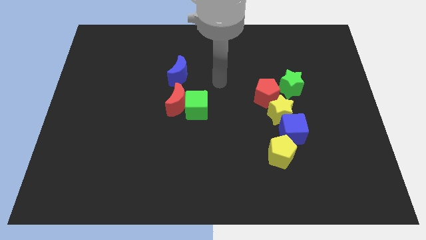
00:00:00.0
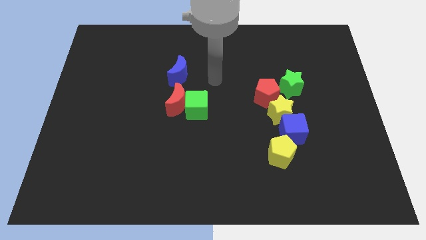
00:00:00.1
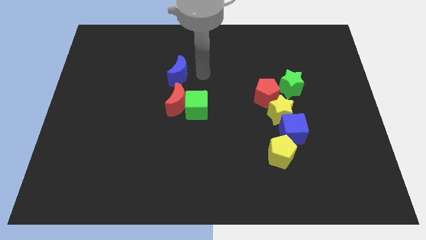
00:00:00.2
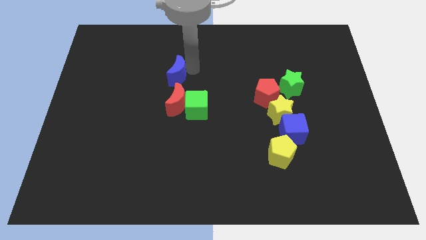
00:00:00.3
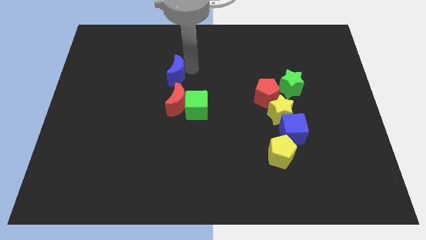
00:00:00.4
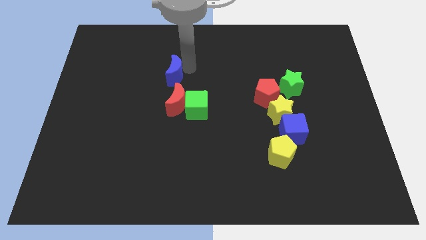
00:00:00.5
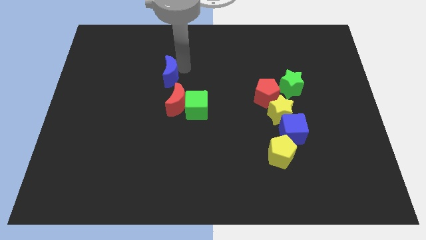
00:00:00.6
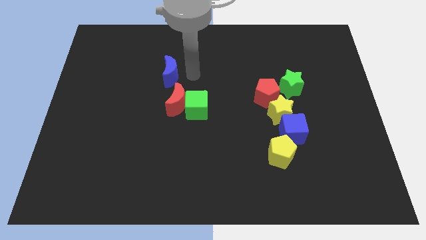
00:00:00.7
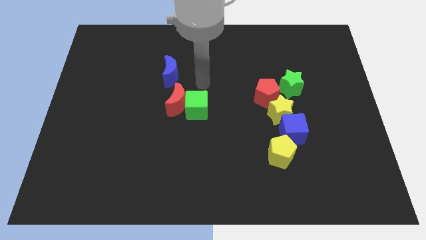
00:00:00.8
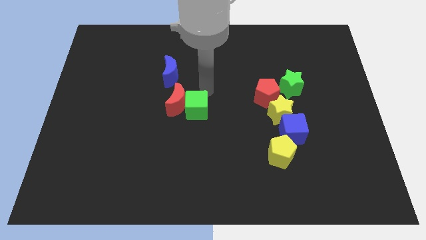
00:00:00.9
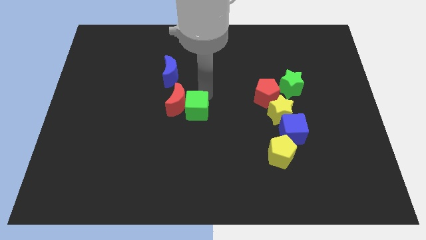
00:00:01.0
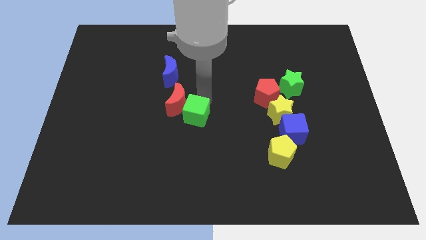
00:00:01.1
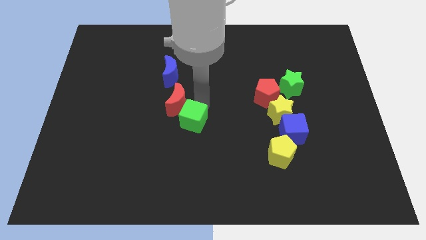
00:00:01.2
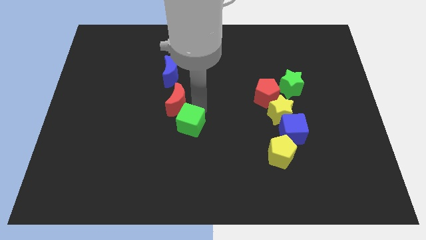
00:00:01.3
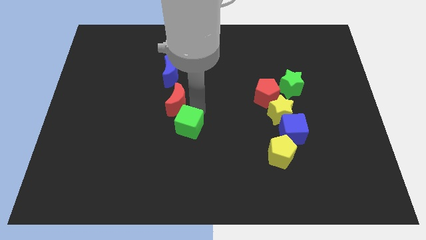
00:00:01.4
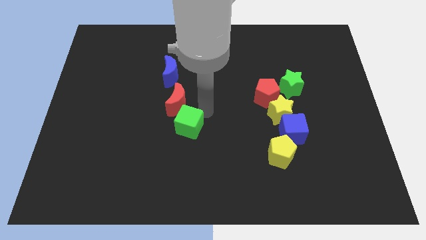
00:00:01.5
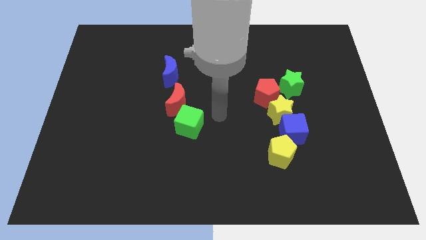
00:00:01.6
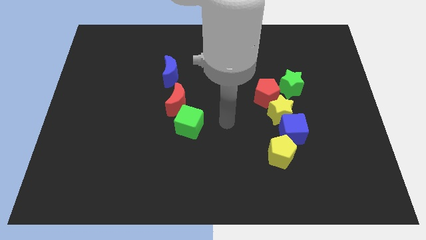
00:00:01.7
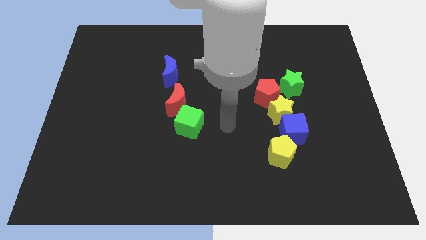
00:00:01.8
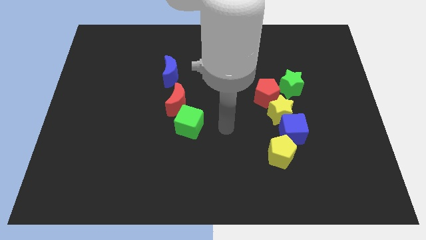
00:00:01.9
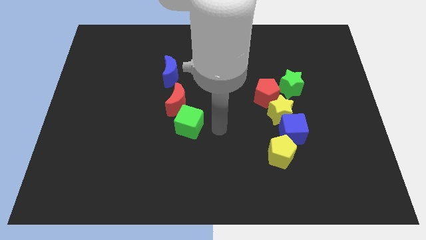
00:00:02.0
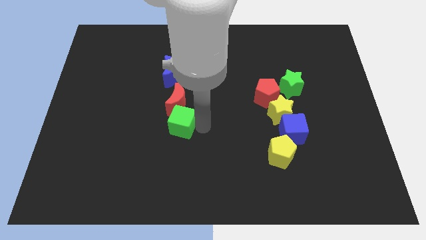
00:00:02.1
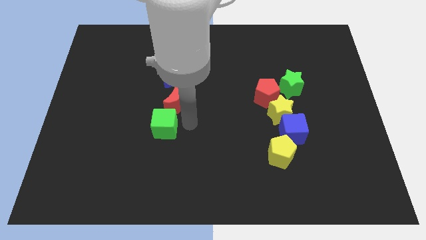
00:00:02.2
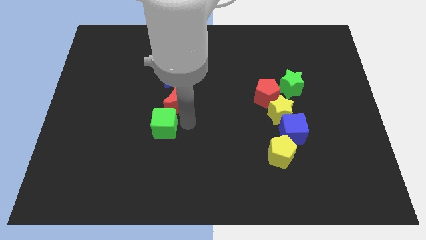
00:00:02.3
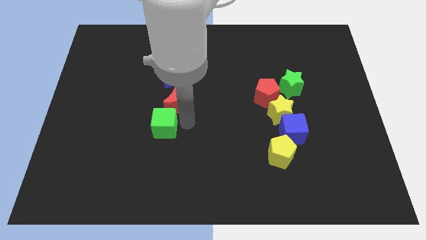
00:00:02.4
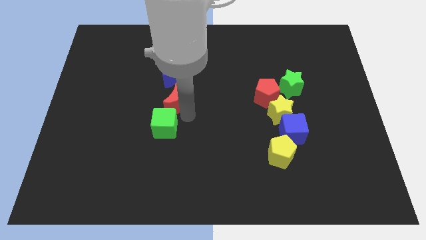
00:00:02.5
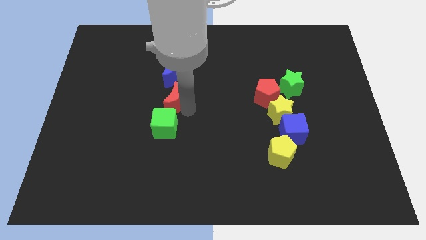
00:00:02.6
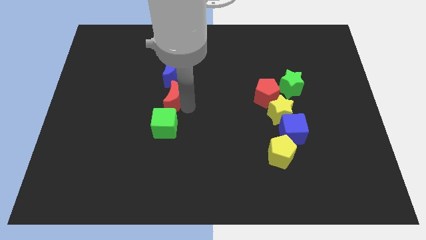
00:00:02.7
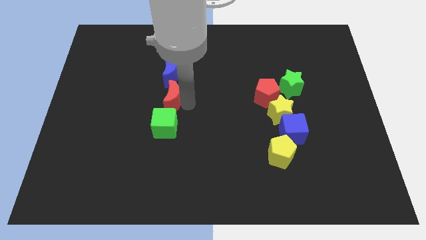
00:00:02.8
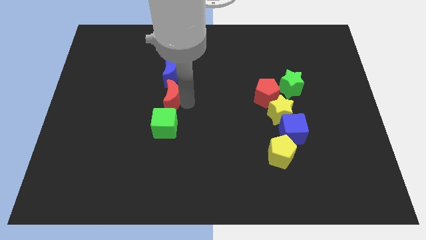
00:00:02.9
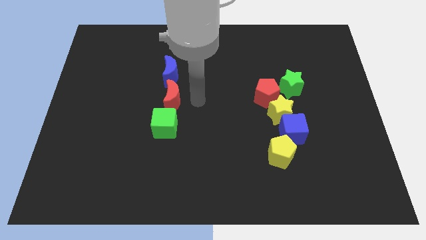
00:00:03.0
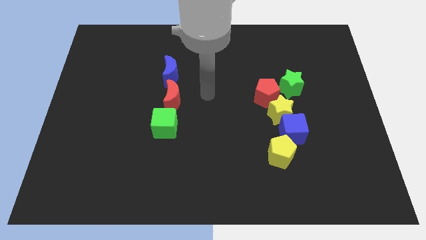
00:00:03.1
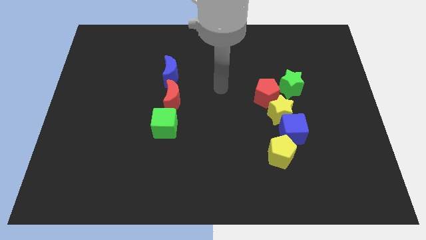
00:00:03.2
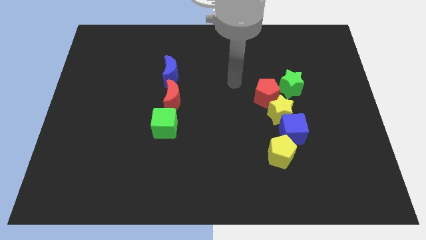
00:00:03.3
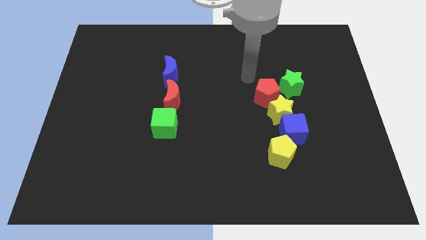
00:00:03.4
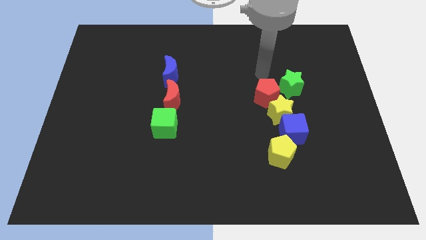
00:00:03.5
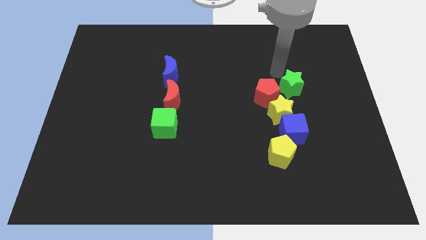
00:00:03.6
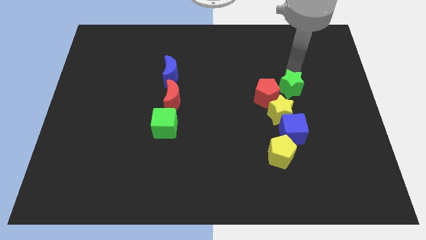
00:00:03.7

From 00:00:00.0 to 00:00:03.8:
adjust the blue crescent red crescent and green cube to form a vertical line of blocks

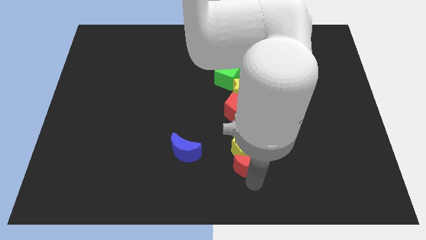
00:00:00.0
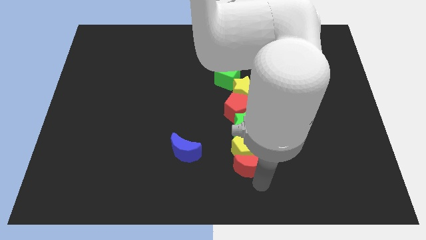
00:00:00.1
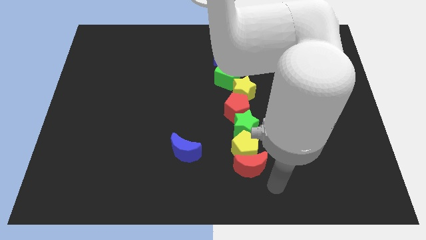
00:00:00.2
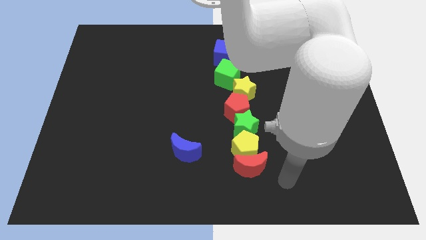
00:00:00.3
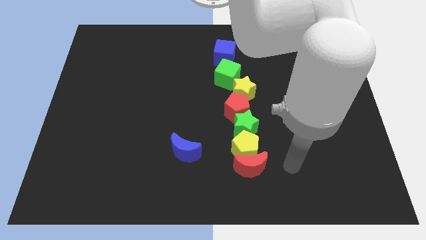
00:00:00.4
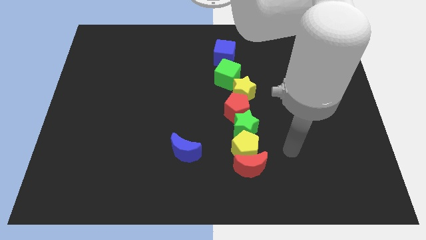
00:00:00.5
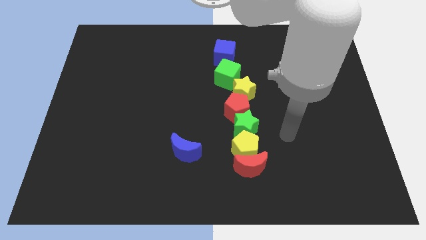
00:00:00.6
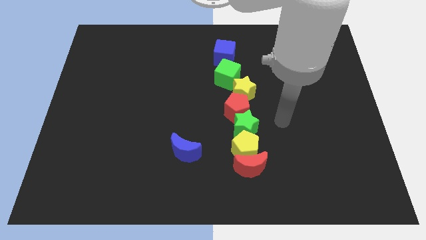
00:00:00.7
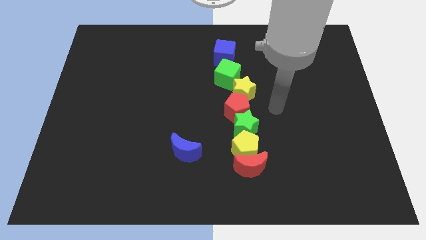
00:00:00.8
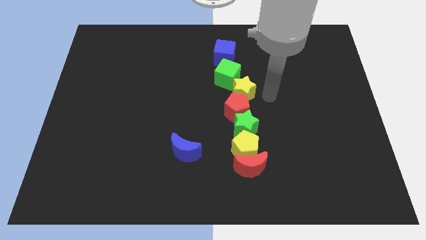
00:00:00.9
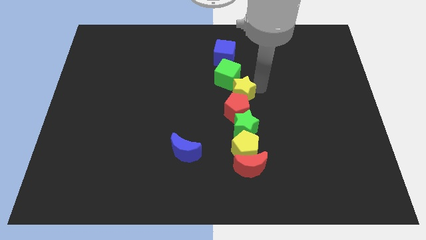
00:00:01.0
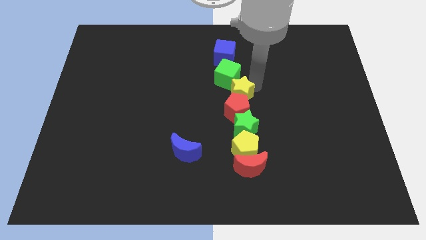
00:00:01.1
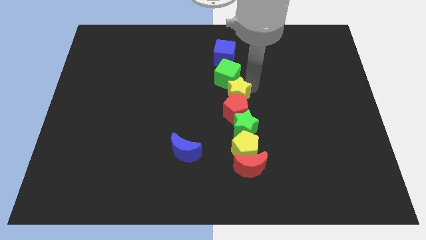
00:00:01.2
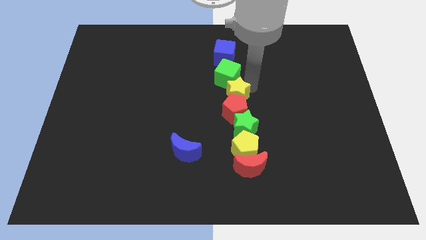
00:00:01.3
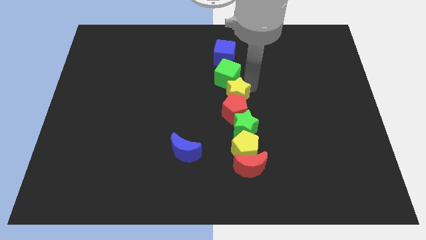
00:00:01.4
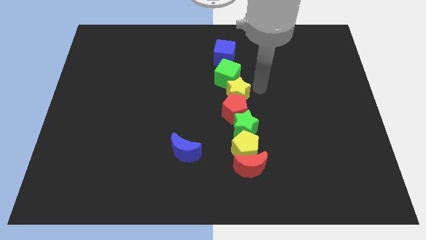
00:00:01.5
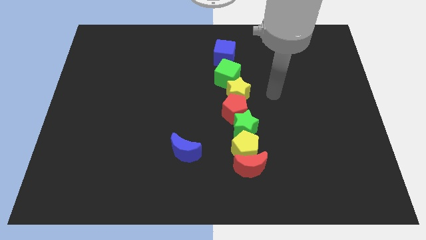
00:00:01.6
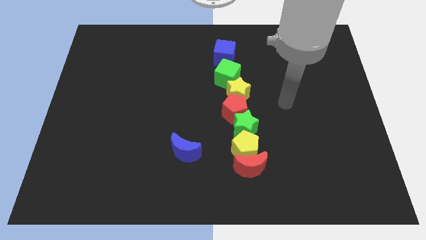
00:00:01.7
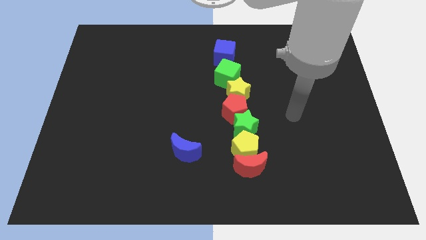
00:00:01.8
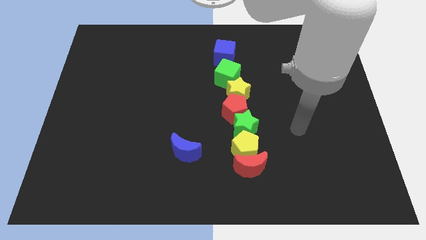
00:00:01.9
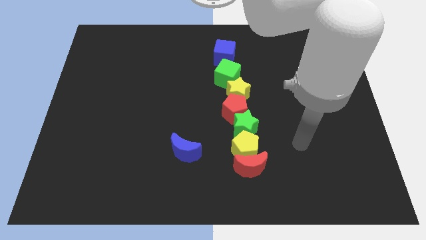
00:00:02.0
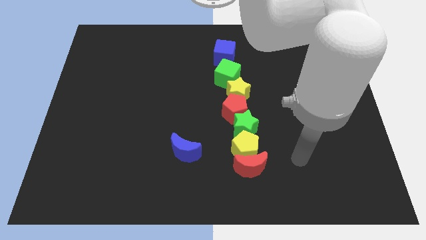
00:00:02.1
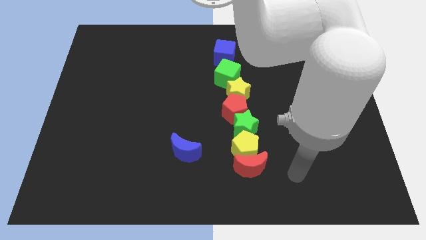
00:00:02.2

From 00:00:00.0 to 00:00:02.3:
adjust the yellow star in between green cube and red pentagon

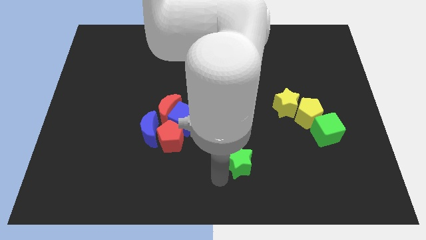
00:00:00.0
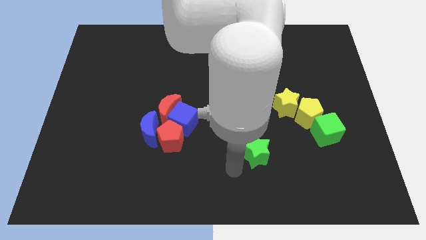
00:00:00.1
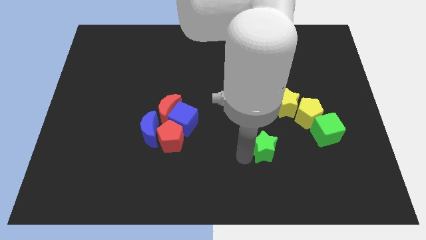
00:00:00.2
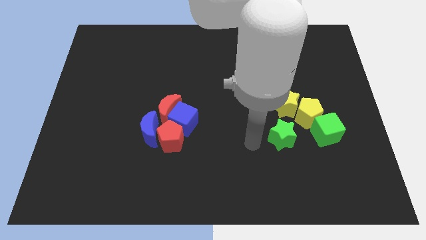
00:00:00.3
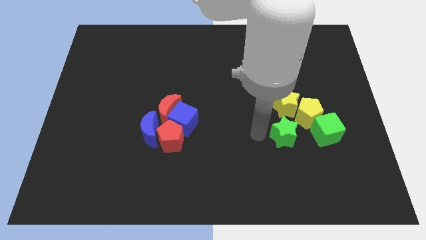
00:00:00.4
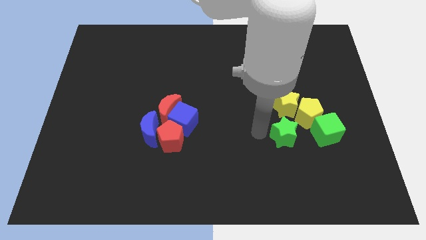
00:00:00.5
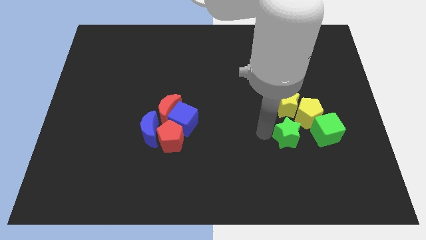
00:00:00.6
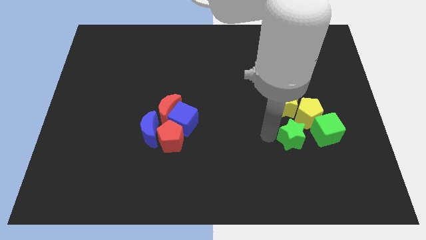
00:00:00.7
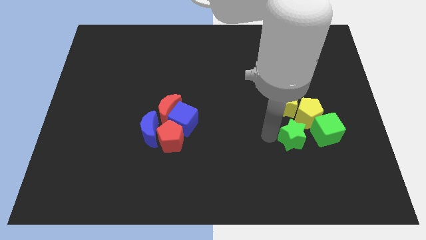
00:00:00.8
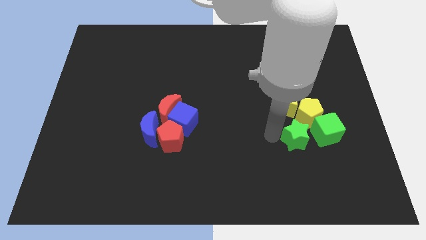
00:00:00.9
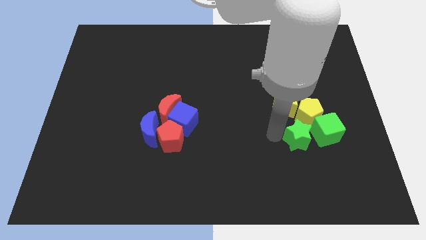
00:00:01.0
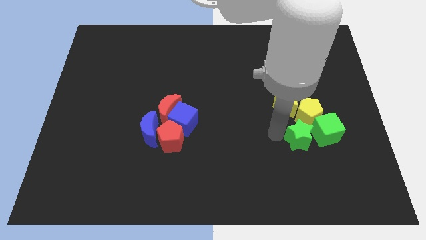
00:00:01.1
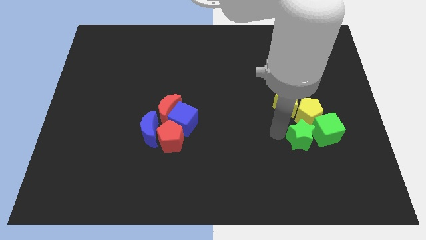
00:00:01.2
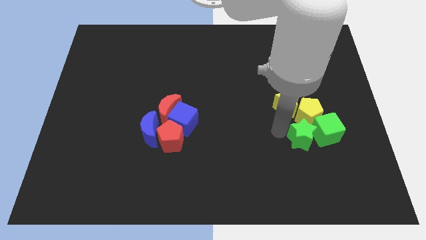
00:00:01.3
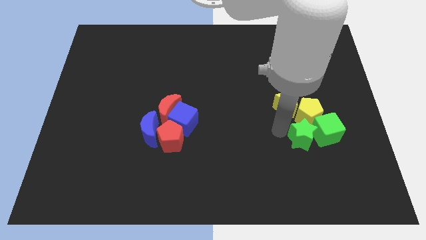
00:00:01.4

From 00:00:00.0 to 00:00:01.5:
move the green star towards the green cube

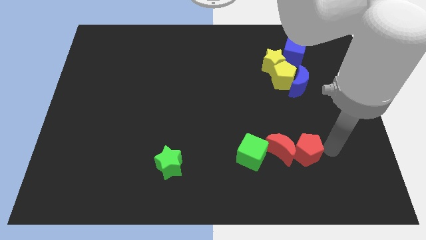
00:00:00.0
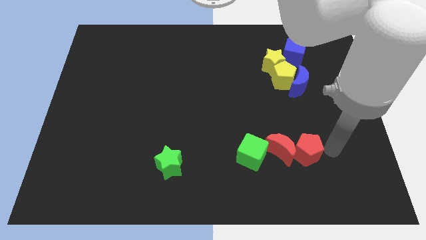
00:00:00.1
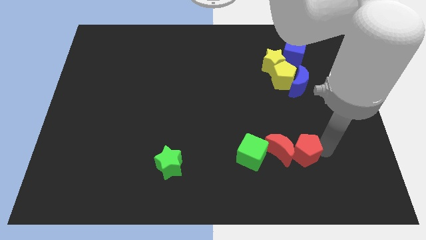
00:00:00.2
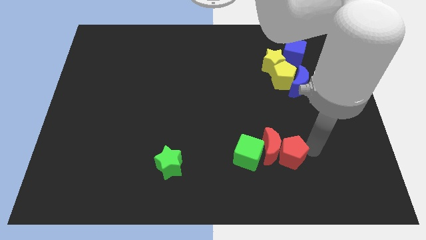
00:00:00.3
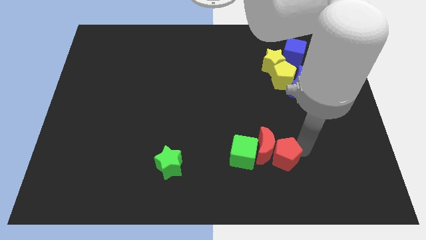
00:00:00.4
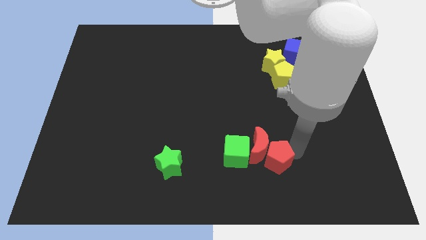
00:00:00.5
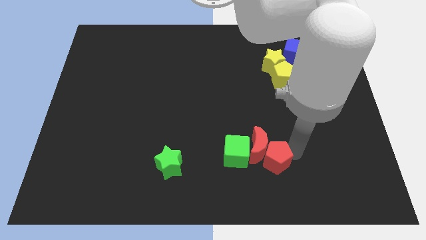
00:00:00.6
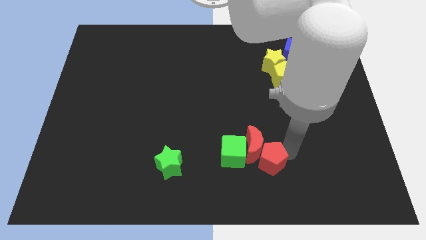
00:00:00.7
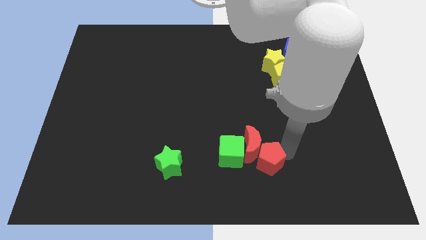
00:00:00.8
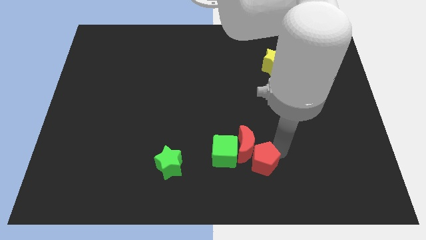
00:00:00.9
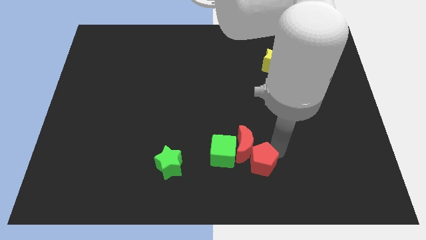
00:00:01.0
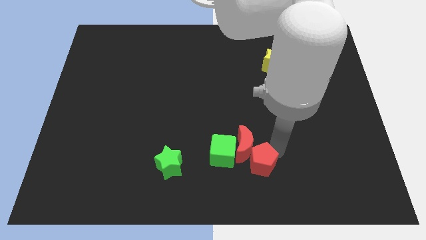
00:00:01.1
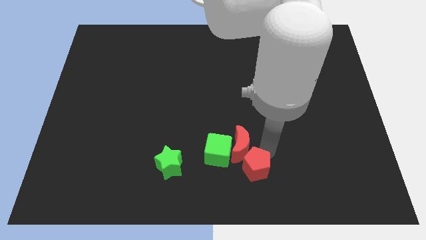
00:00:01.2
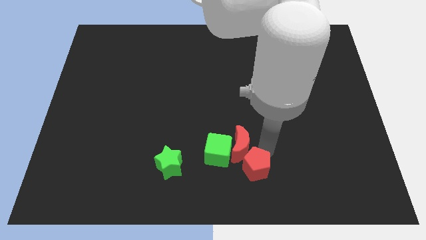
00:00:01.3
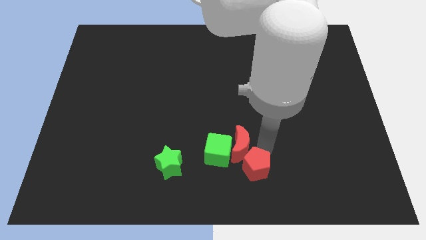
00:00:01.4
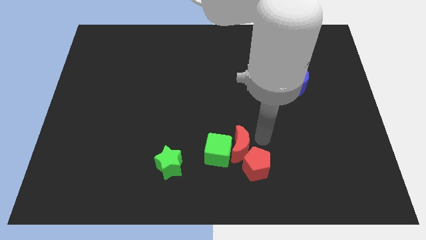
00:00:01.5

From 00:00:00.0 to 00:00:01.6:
push the red blocks into the green cube
